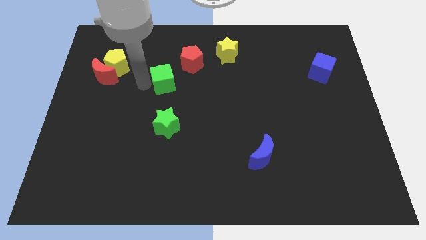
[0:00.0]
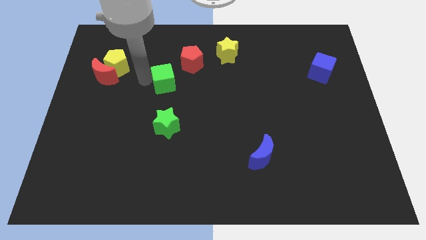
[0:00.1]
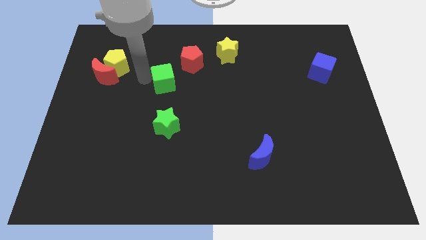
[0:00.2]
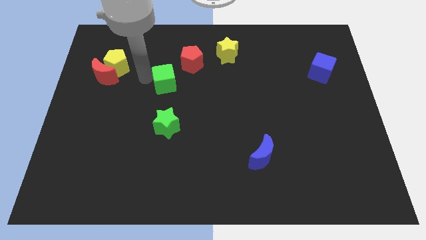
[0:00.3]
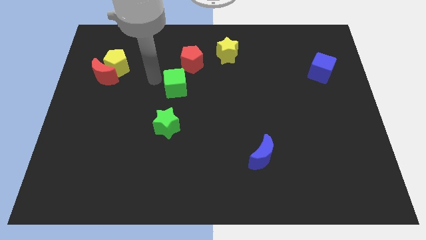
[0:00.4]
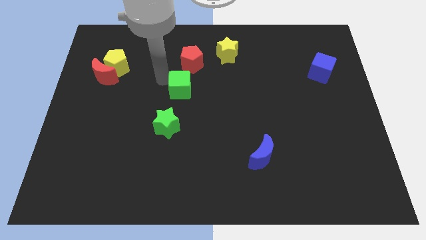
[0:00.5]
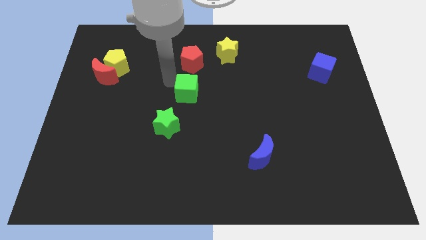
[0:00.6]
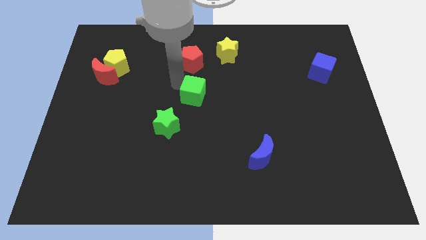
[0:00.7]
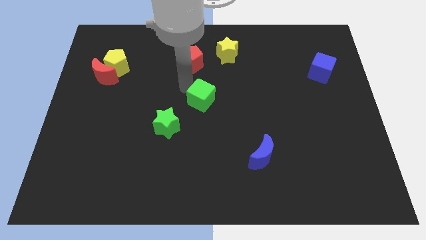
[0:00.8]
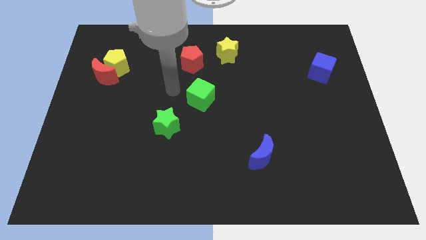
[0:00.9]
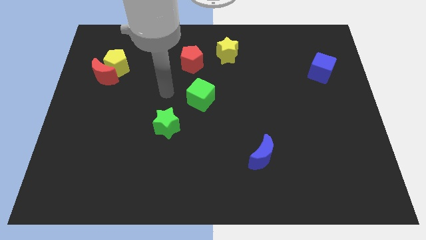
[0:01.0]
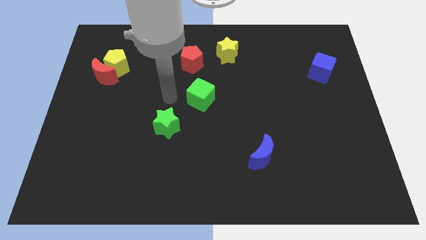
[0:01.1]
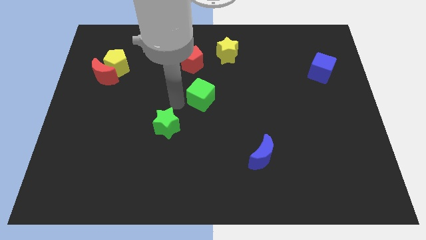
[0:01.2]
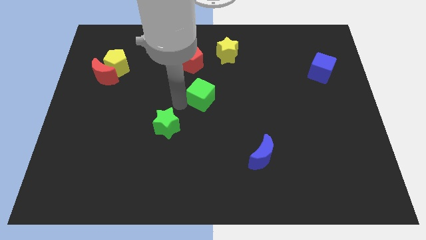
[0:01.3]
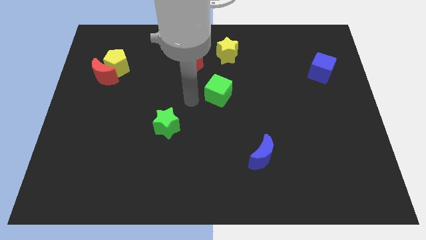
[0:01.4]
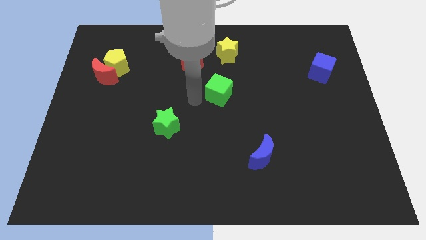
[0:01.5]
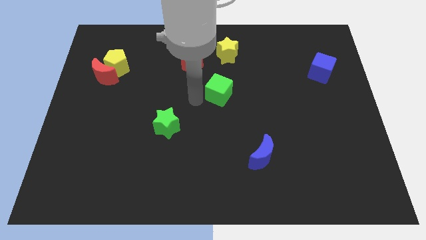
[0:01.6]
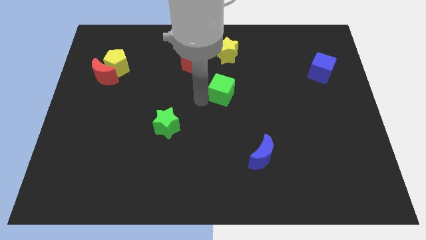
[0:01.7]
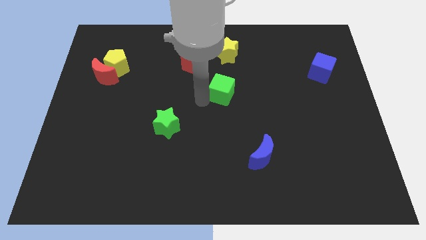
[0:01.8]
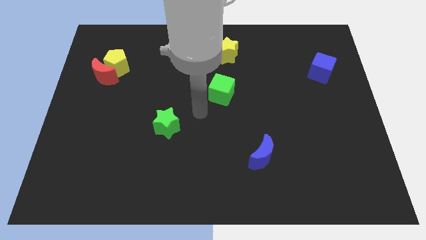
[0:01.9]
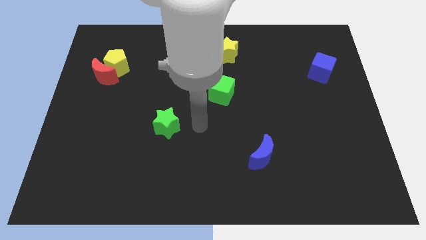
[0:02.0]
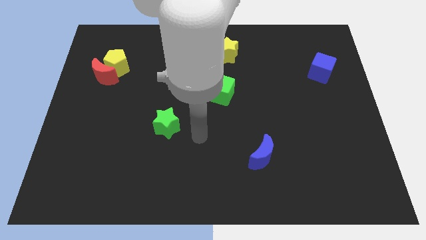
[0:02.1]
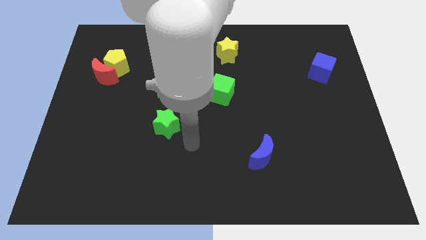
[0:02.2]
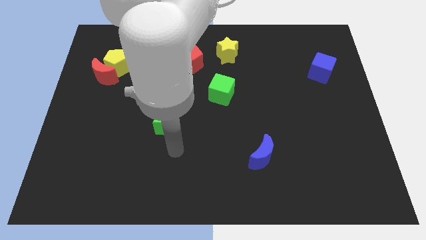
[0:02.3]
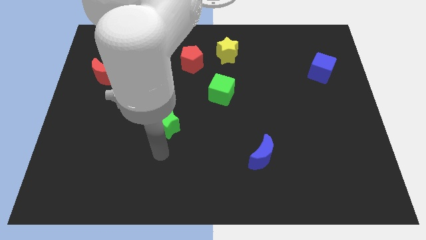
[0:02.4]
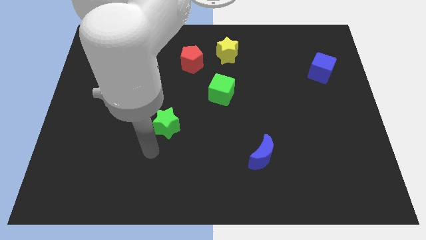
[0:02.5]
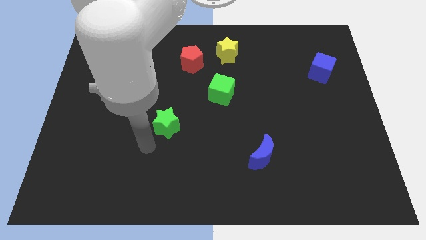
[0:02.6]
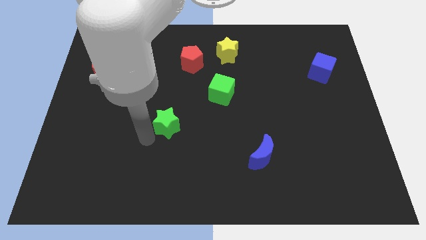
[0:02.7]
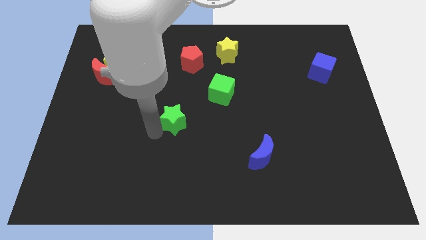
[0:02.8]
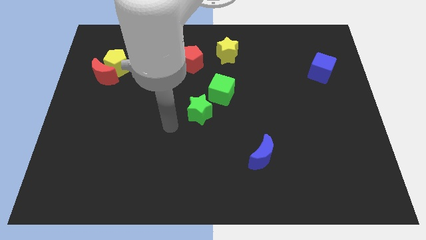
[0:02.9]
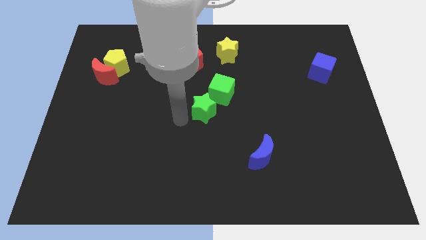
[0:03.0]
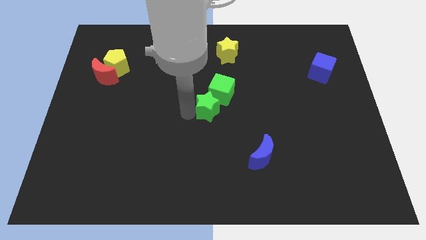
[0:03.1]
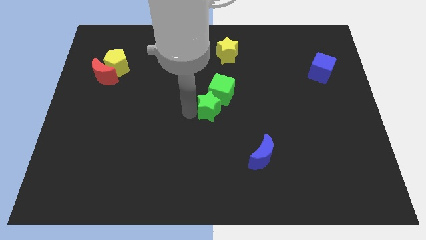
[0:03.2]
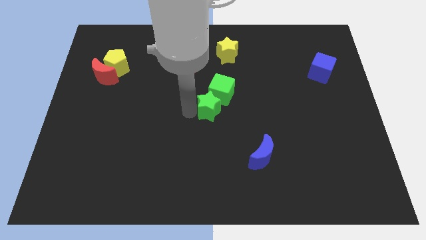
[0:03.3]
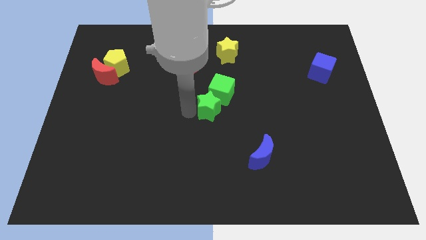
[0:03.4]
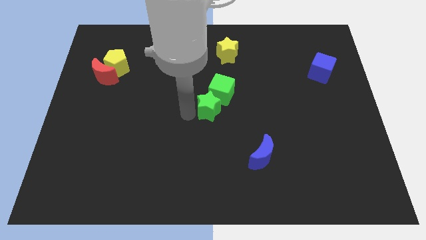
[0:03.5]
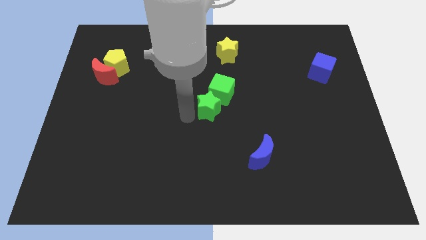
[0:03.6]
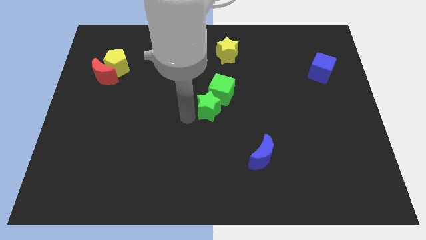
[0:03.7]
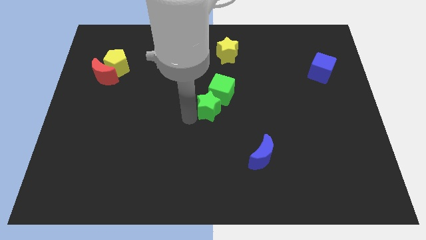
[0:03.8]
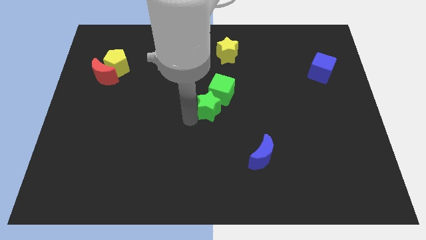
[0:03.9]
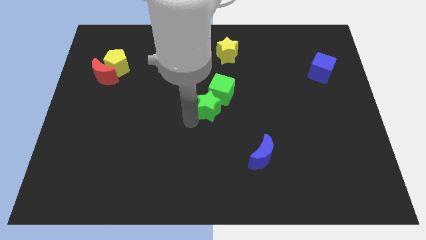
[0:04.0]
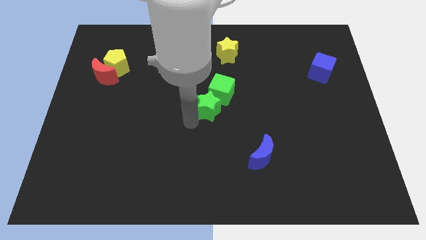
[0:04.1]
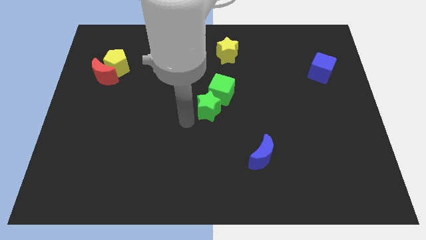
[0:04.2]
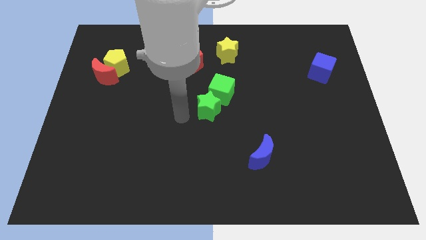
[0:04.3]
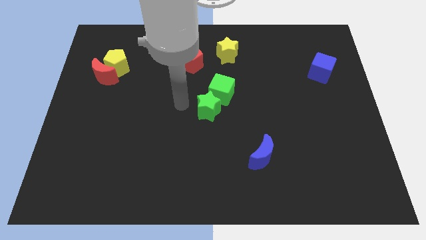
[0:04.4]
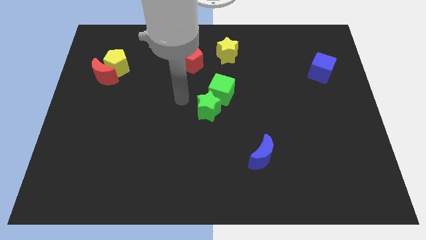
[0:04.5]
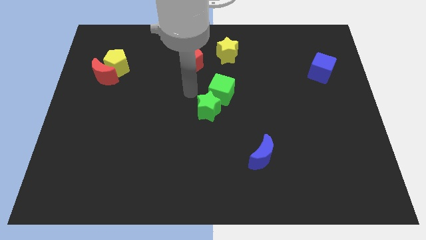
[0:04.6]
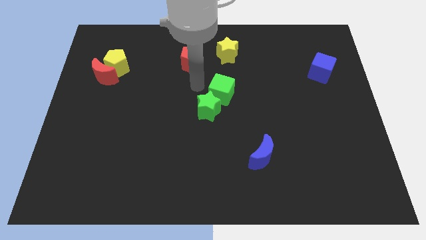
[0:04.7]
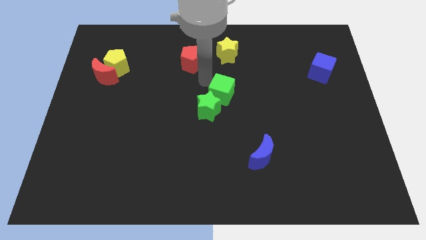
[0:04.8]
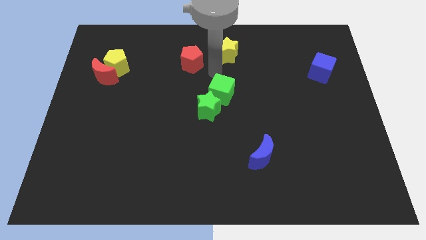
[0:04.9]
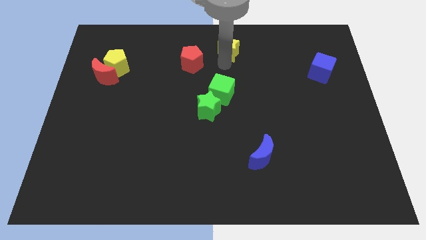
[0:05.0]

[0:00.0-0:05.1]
place two green blocks together

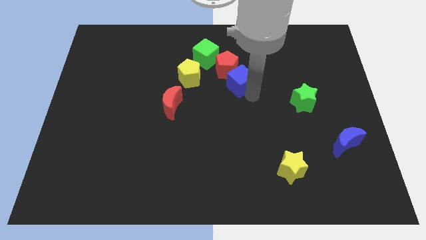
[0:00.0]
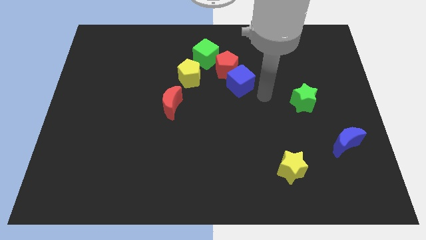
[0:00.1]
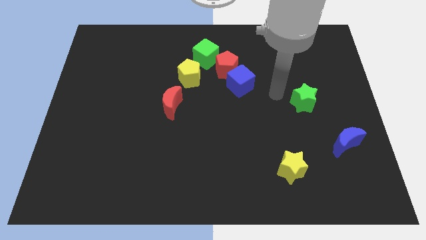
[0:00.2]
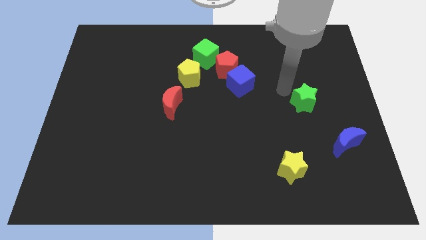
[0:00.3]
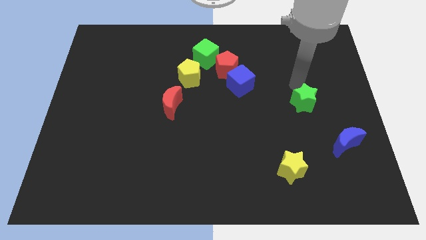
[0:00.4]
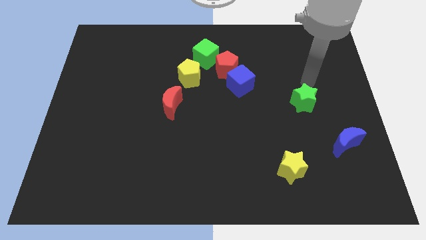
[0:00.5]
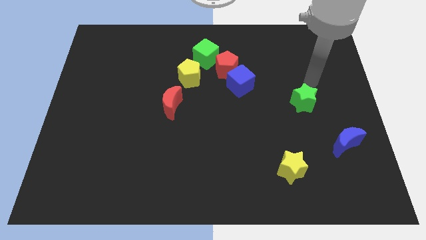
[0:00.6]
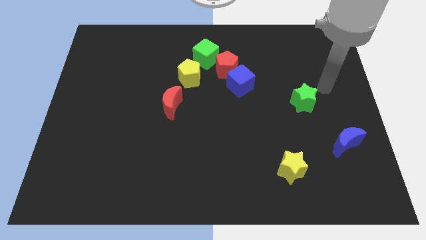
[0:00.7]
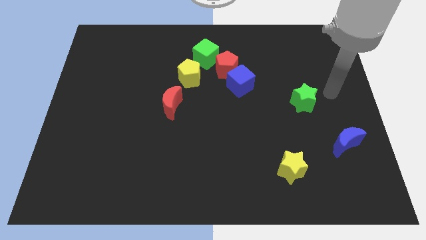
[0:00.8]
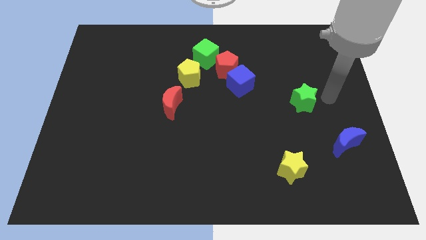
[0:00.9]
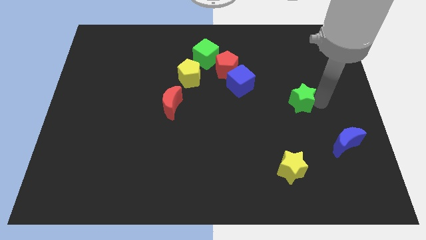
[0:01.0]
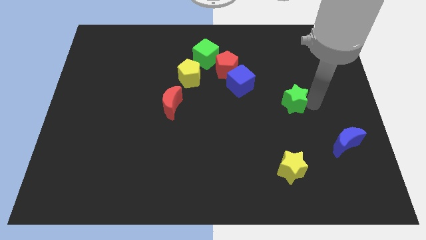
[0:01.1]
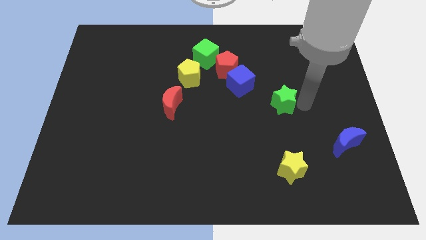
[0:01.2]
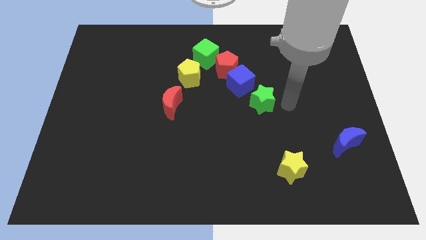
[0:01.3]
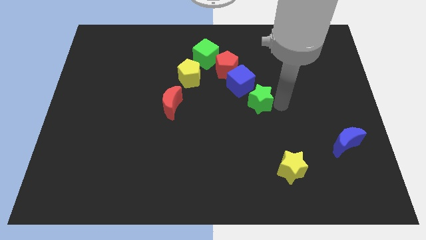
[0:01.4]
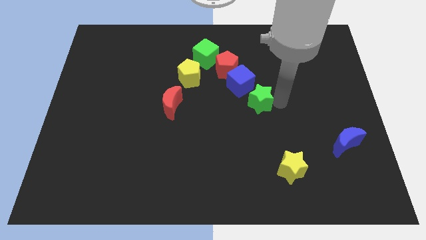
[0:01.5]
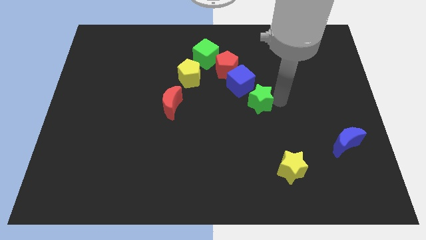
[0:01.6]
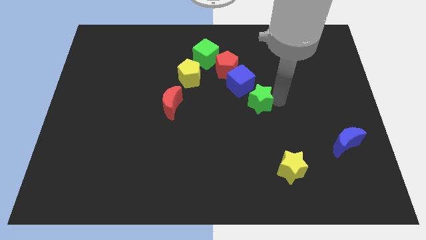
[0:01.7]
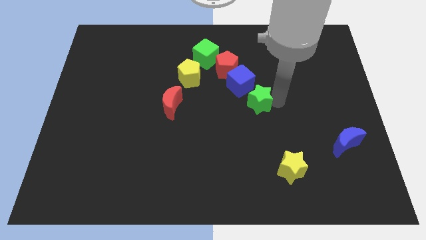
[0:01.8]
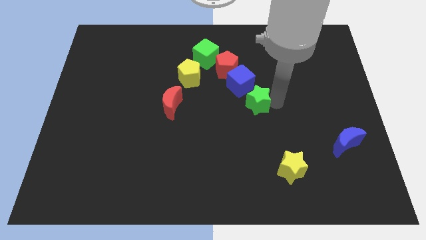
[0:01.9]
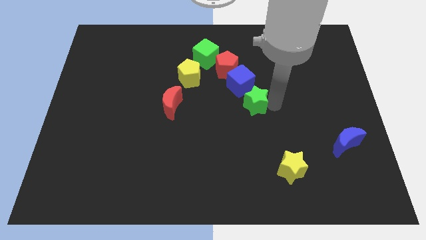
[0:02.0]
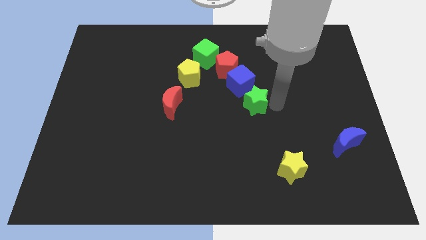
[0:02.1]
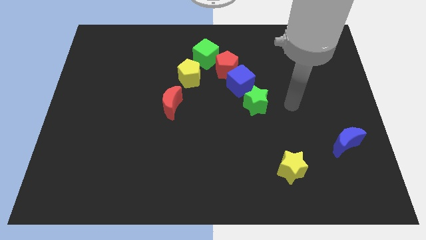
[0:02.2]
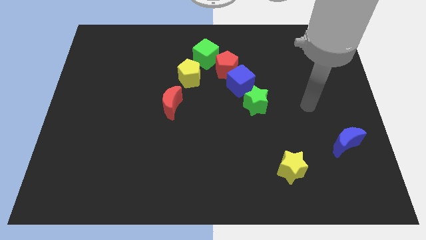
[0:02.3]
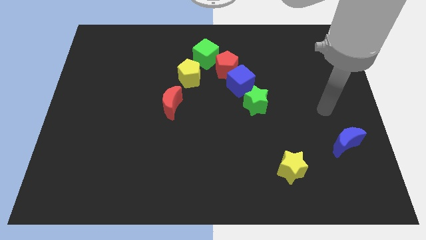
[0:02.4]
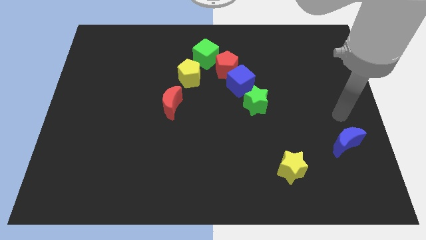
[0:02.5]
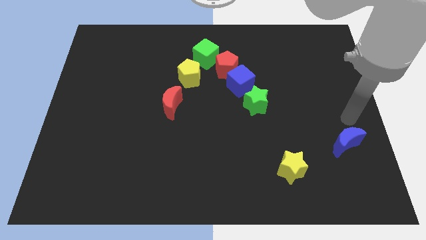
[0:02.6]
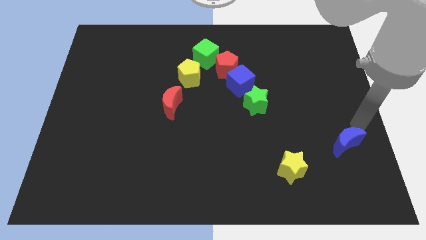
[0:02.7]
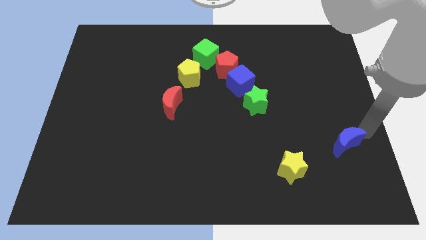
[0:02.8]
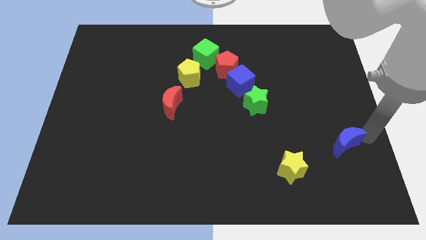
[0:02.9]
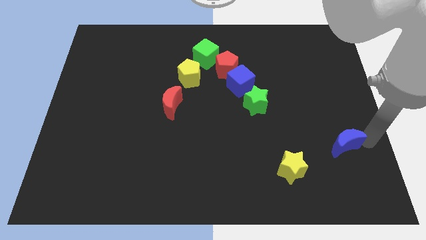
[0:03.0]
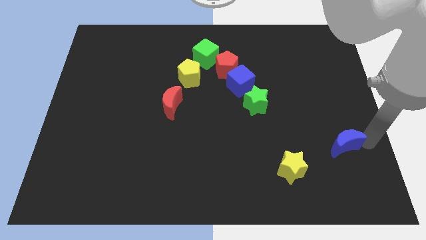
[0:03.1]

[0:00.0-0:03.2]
move the green star to the bottom side of the blue cube

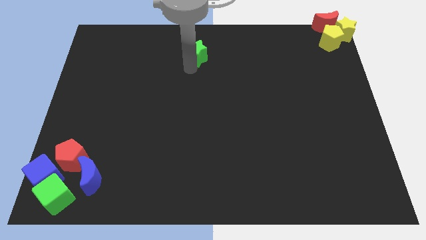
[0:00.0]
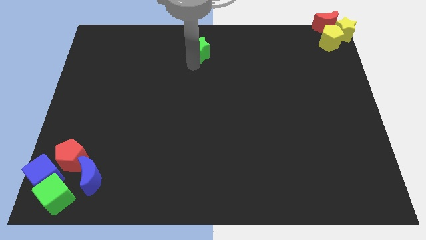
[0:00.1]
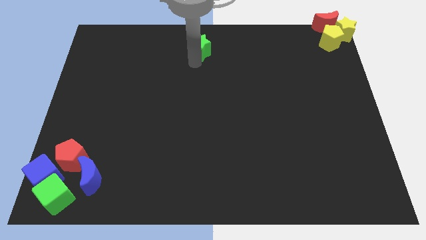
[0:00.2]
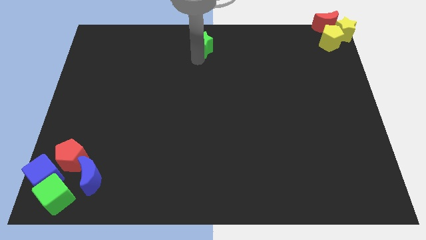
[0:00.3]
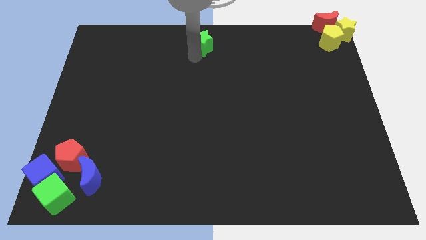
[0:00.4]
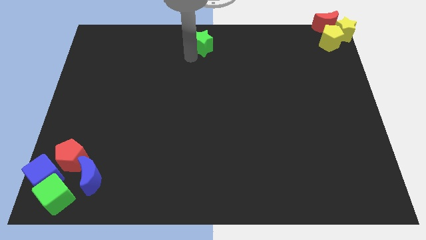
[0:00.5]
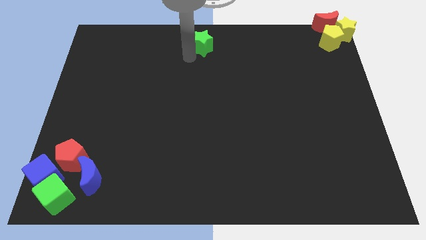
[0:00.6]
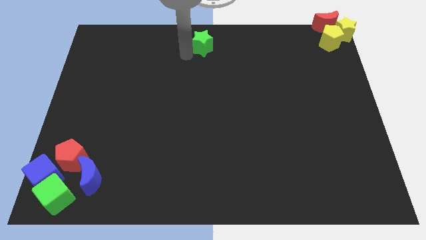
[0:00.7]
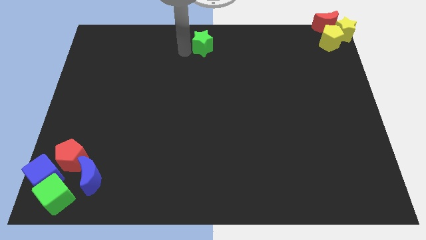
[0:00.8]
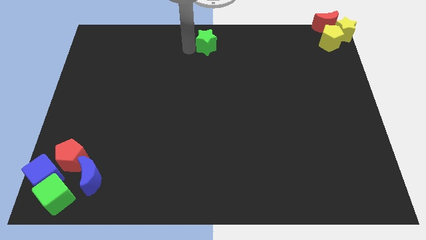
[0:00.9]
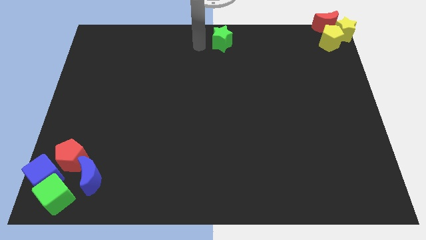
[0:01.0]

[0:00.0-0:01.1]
push the green star to the top center of the board
